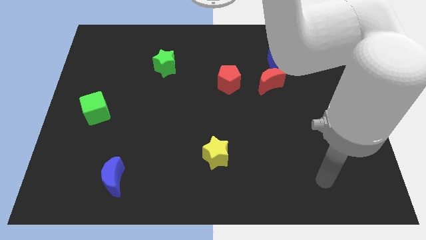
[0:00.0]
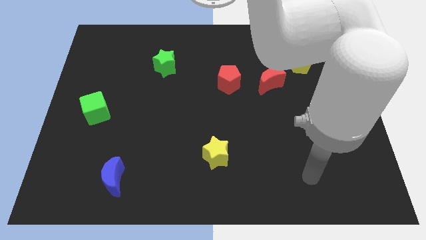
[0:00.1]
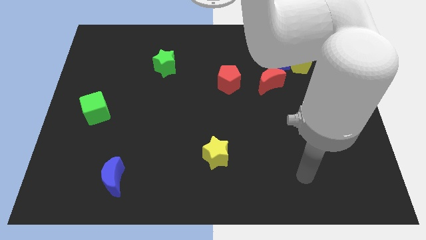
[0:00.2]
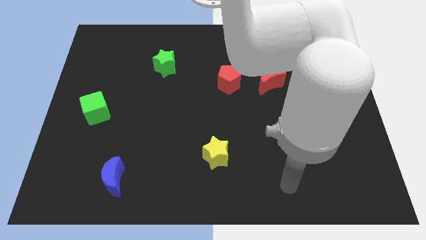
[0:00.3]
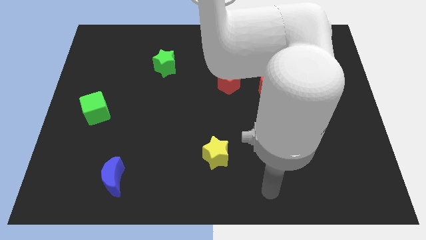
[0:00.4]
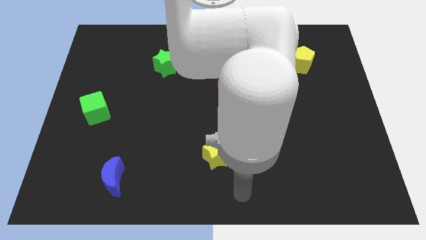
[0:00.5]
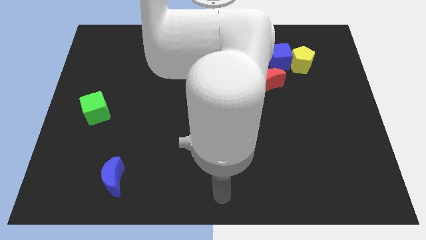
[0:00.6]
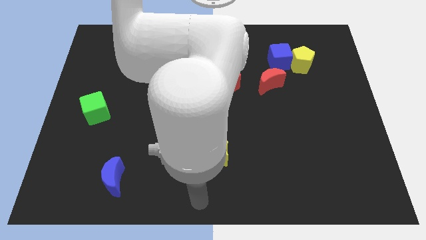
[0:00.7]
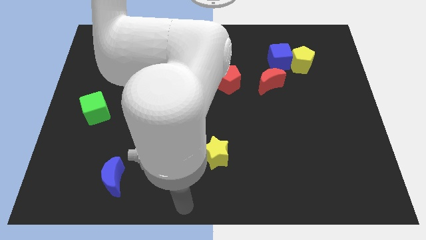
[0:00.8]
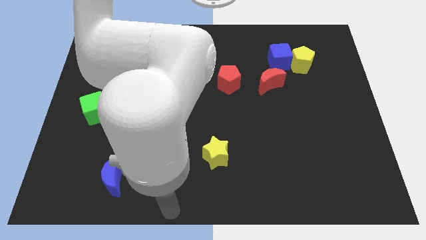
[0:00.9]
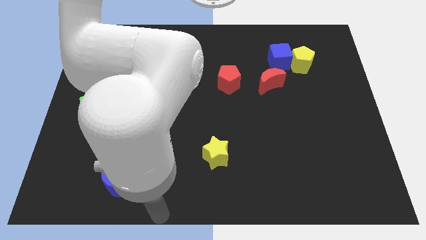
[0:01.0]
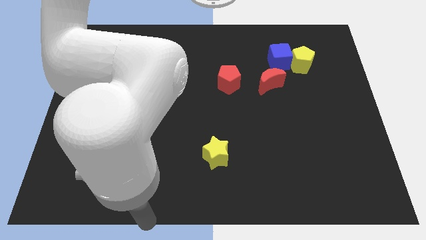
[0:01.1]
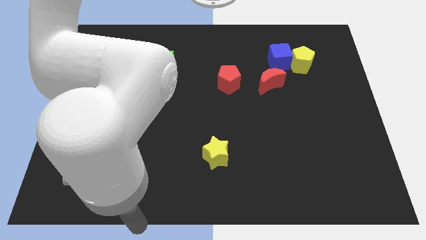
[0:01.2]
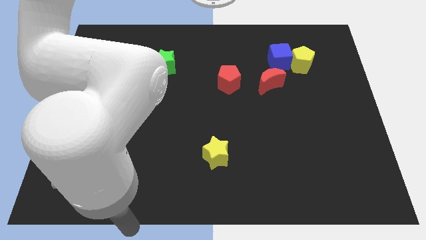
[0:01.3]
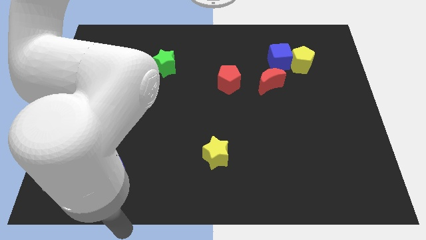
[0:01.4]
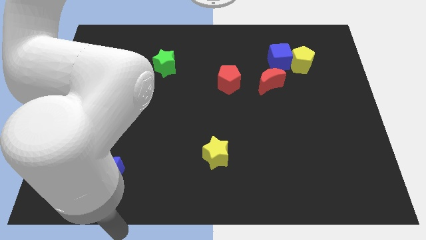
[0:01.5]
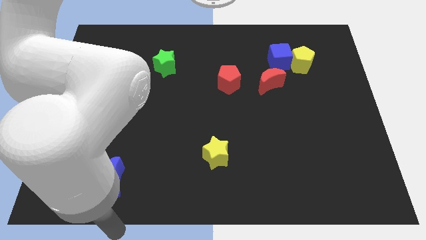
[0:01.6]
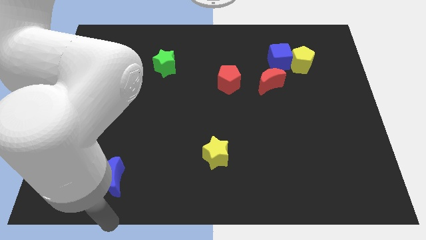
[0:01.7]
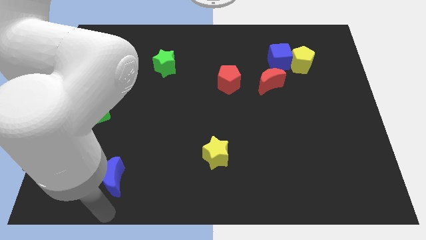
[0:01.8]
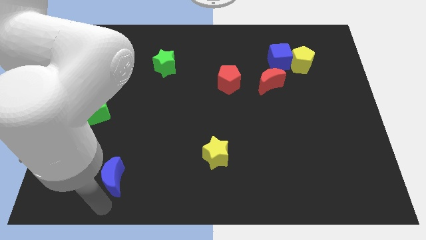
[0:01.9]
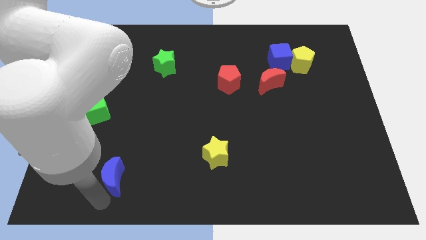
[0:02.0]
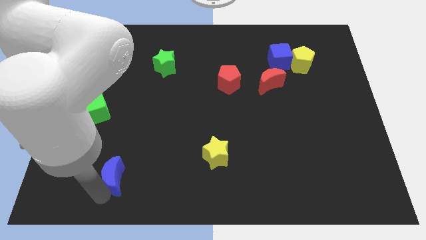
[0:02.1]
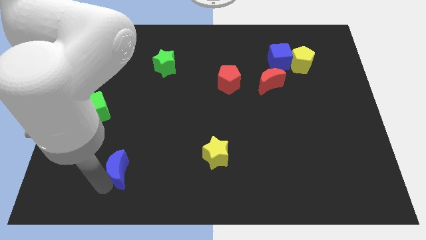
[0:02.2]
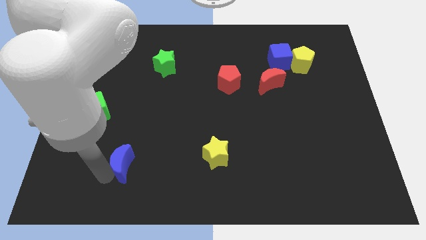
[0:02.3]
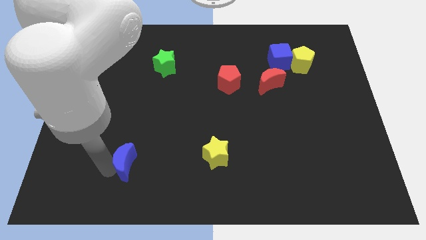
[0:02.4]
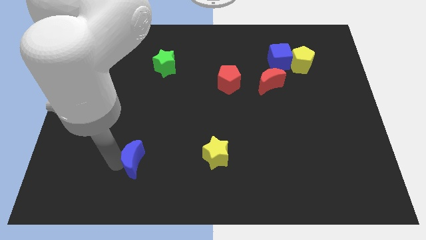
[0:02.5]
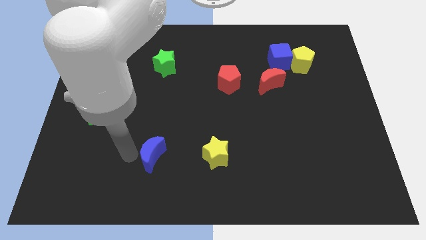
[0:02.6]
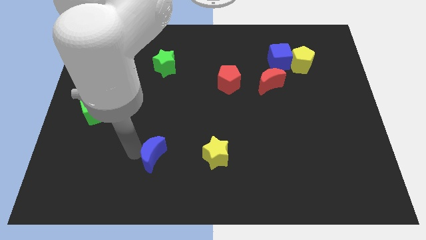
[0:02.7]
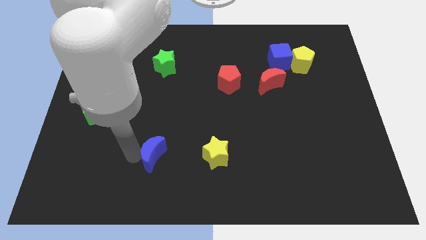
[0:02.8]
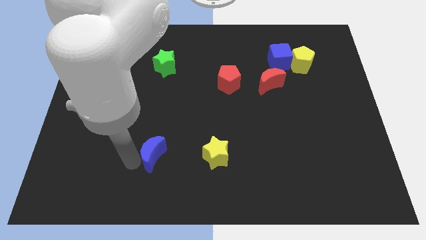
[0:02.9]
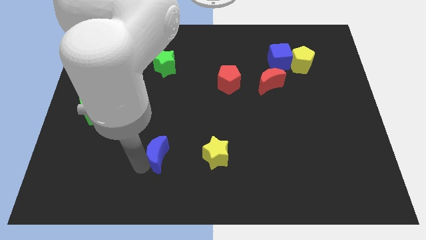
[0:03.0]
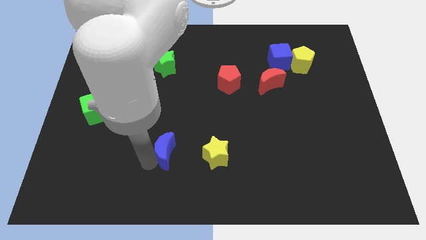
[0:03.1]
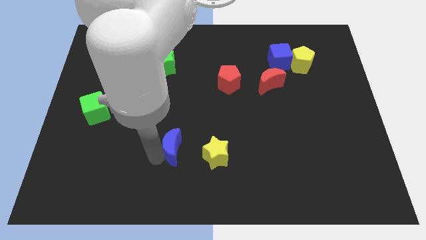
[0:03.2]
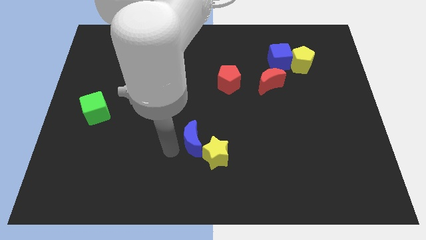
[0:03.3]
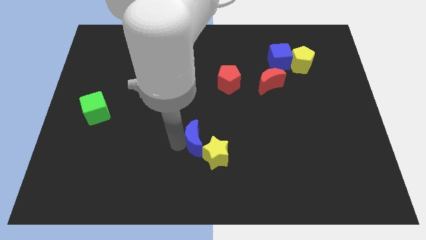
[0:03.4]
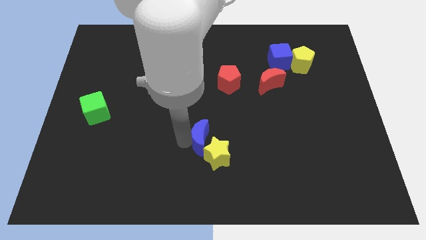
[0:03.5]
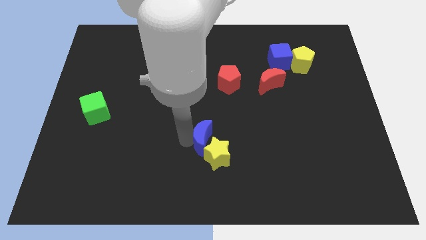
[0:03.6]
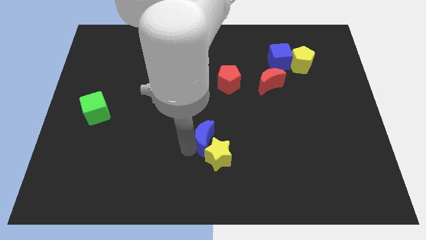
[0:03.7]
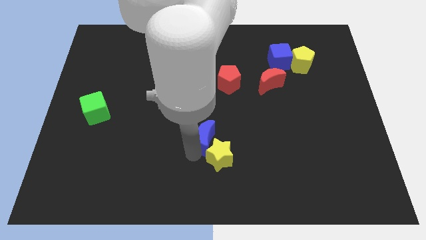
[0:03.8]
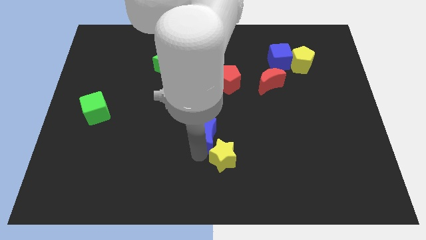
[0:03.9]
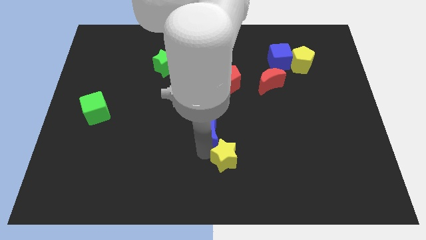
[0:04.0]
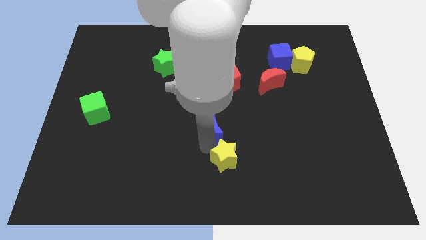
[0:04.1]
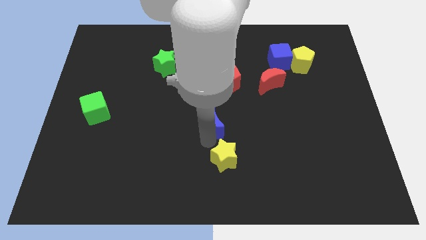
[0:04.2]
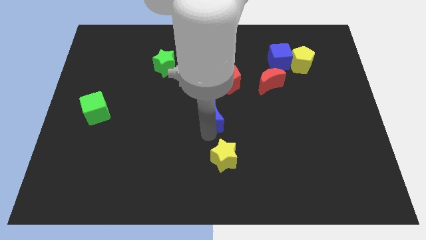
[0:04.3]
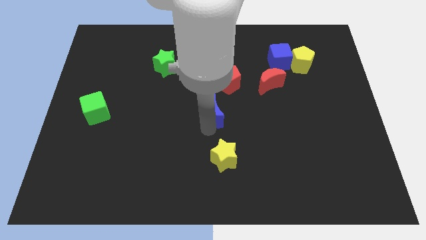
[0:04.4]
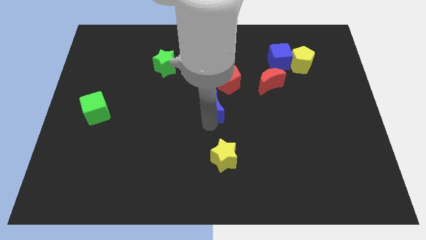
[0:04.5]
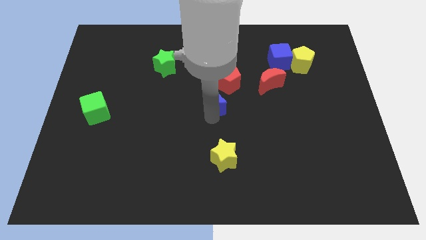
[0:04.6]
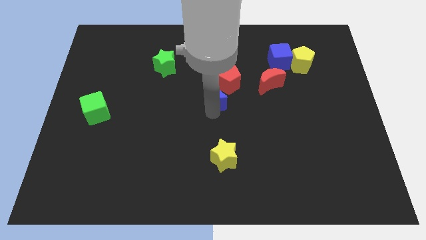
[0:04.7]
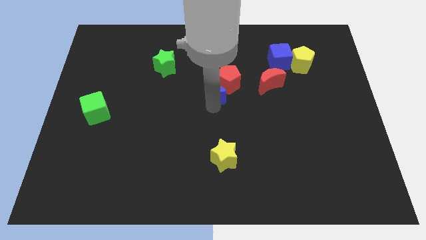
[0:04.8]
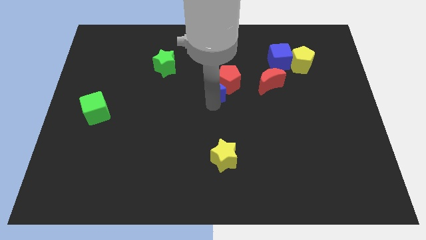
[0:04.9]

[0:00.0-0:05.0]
slide the blue moon close to the red pentagon

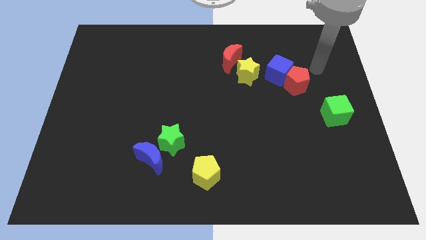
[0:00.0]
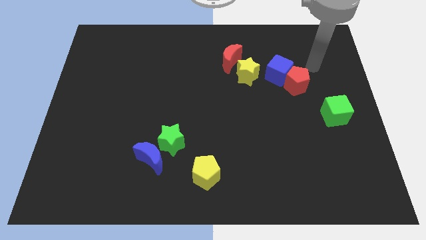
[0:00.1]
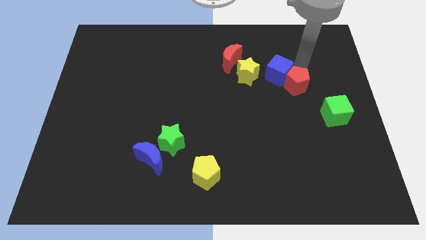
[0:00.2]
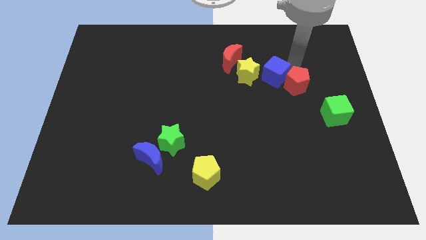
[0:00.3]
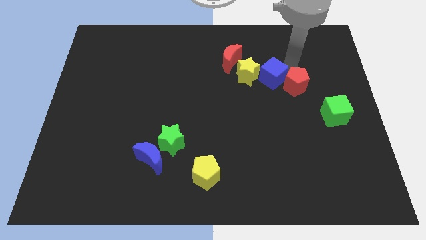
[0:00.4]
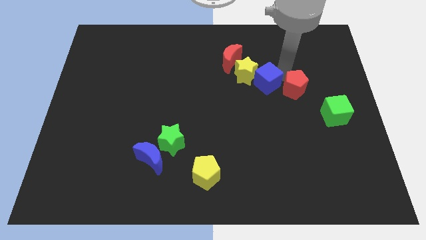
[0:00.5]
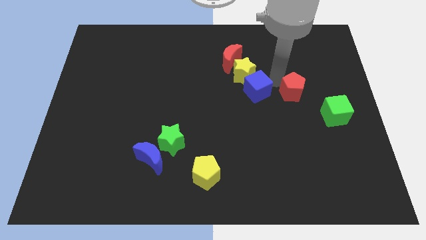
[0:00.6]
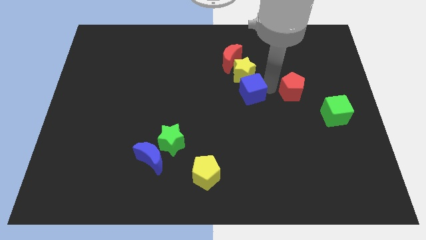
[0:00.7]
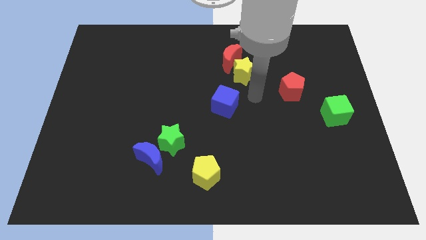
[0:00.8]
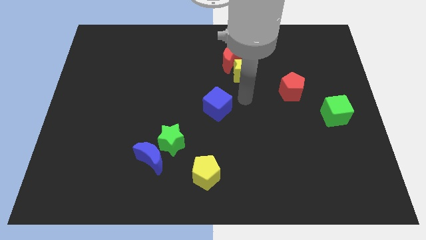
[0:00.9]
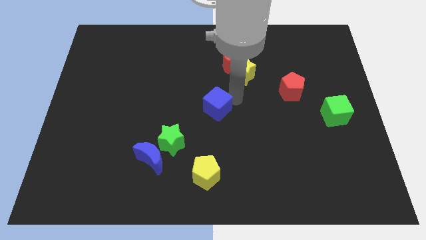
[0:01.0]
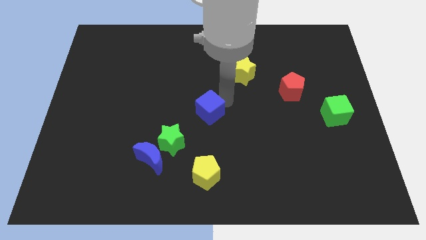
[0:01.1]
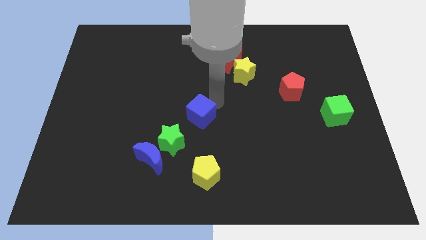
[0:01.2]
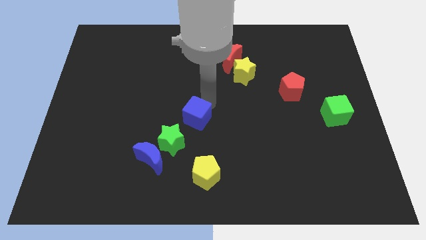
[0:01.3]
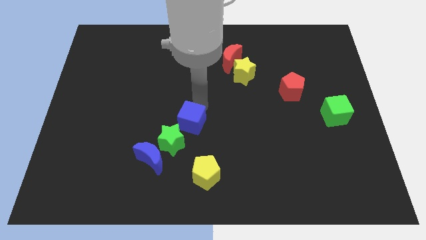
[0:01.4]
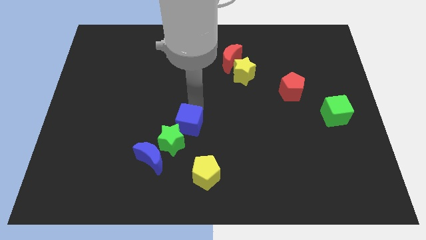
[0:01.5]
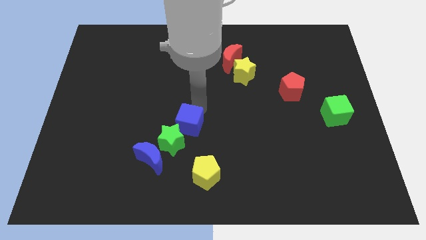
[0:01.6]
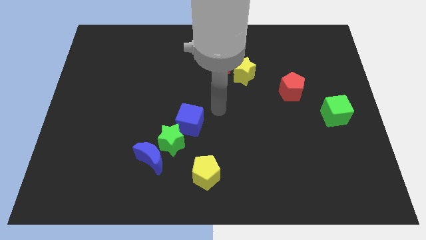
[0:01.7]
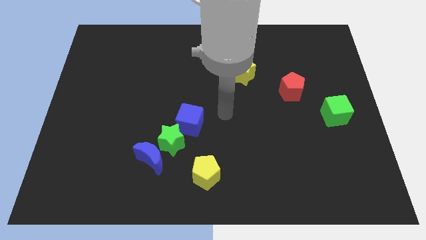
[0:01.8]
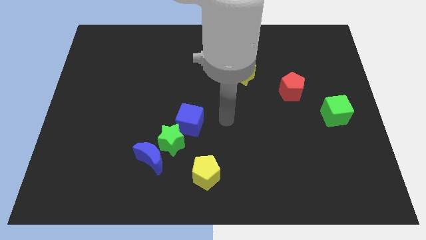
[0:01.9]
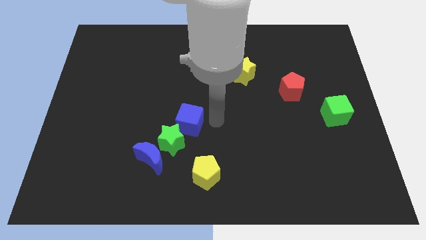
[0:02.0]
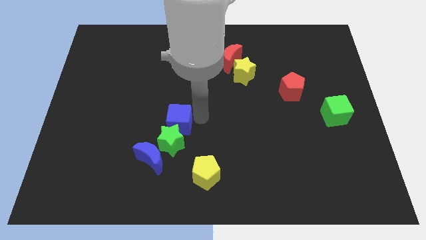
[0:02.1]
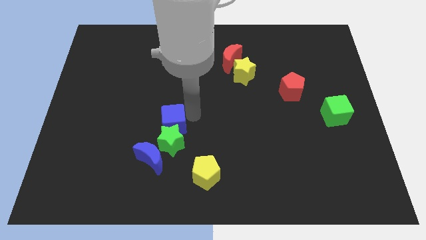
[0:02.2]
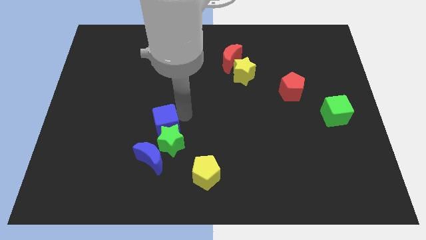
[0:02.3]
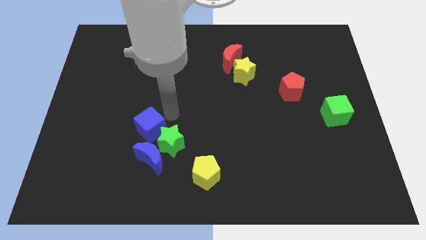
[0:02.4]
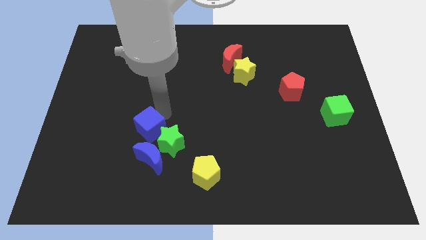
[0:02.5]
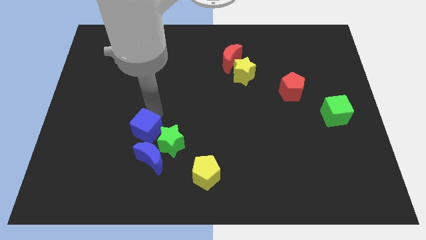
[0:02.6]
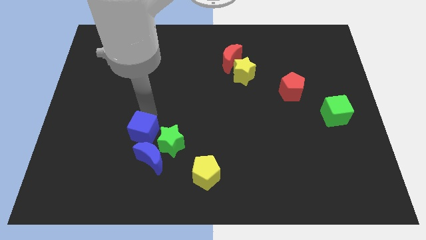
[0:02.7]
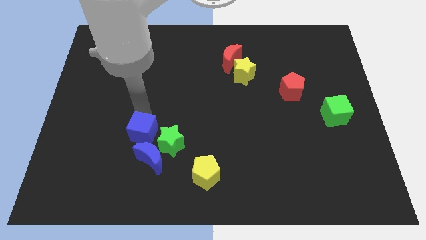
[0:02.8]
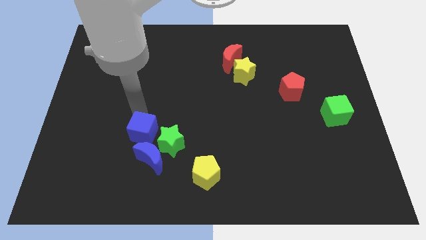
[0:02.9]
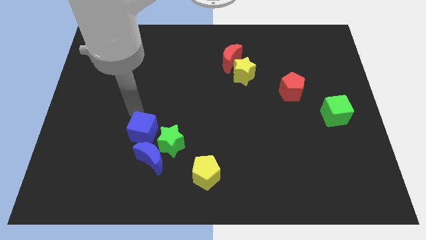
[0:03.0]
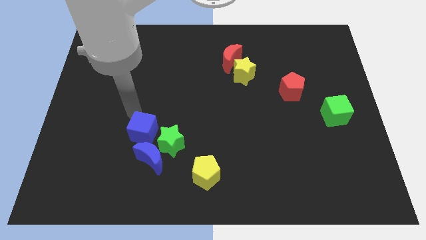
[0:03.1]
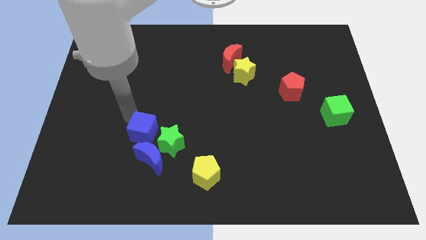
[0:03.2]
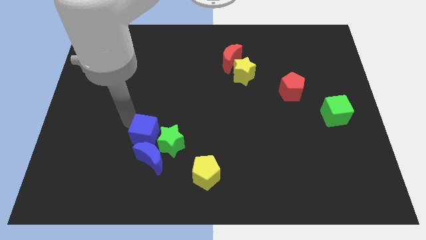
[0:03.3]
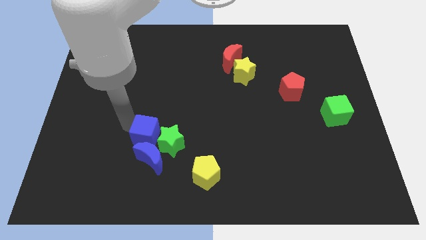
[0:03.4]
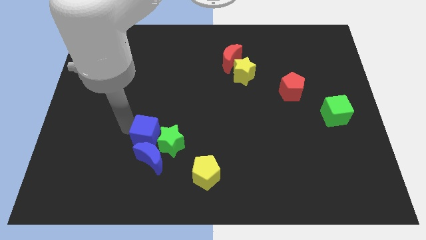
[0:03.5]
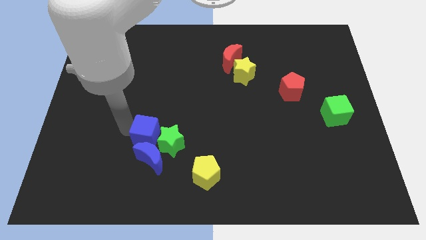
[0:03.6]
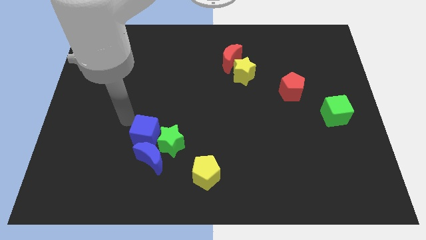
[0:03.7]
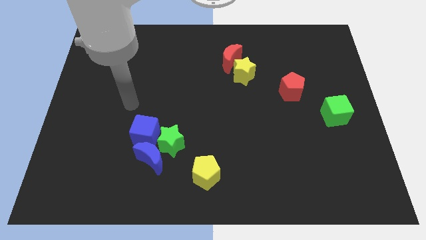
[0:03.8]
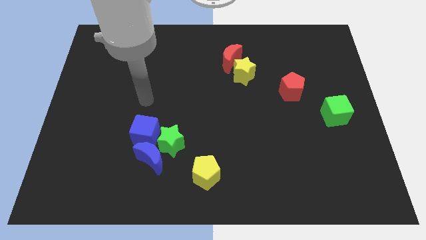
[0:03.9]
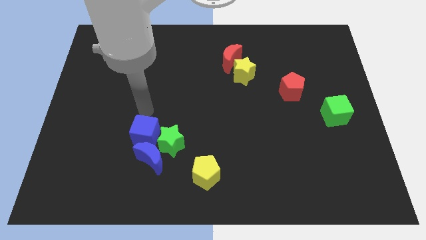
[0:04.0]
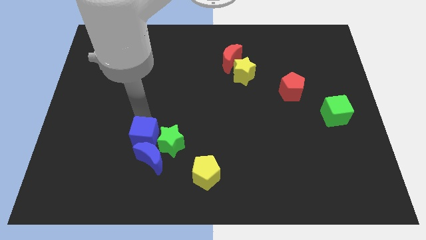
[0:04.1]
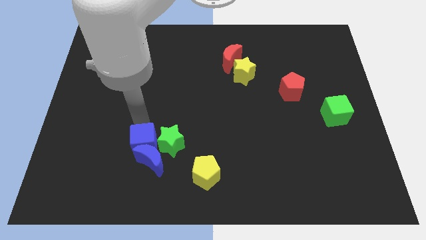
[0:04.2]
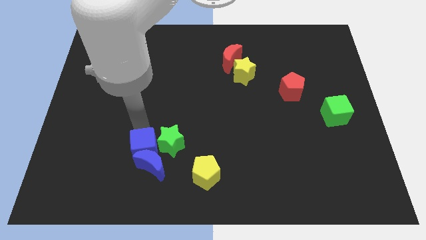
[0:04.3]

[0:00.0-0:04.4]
push the blue cube to the blue moon
